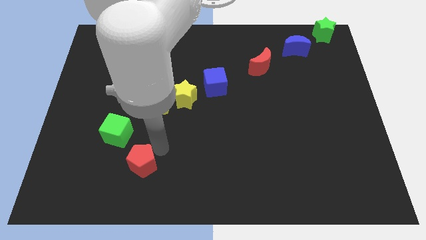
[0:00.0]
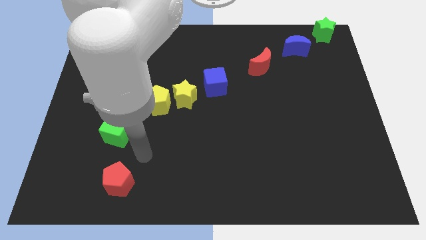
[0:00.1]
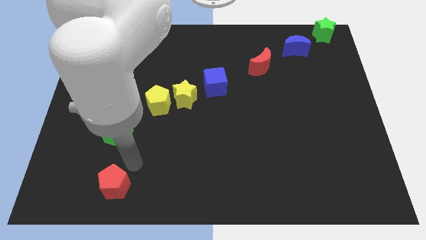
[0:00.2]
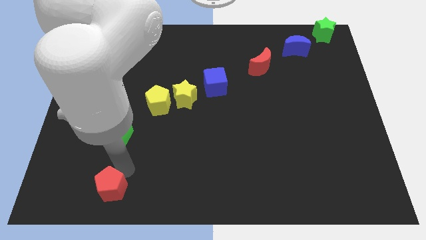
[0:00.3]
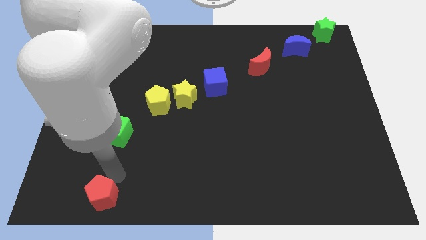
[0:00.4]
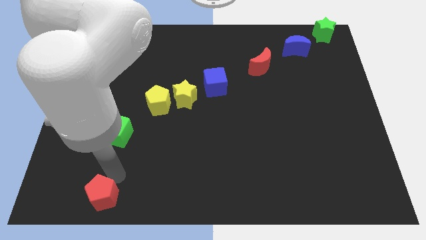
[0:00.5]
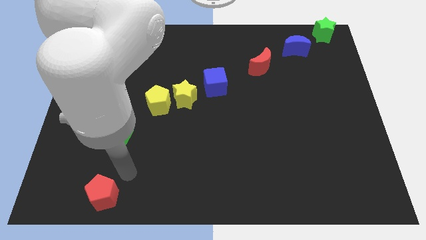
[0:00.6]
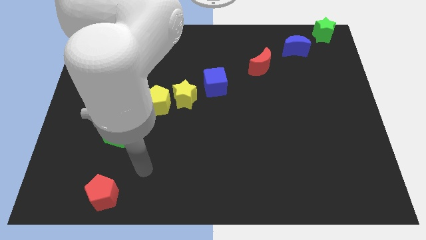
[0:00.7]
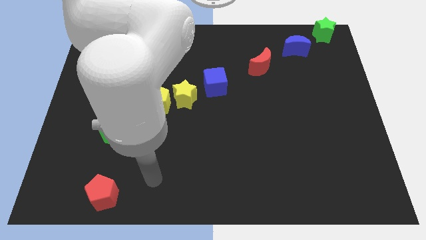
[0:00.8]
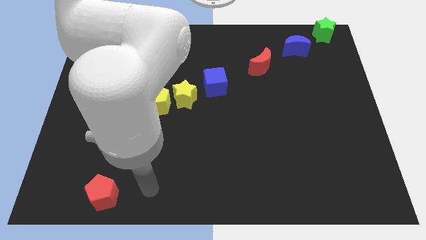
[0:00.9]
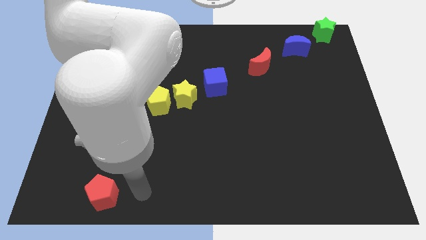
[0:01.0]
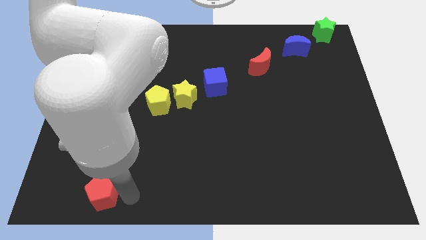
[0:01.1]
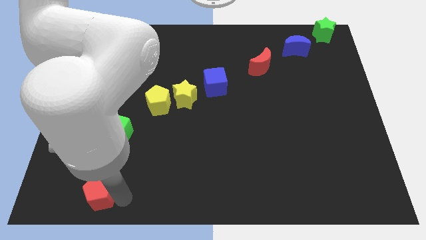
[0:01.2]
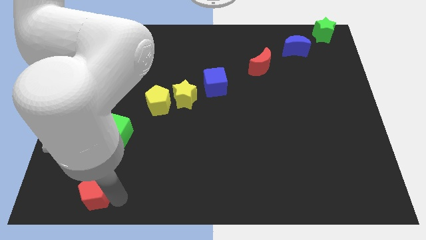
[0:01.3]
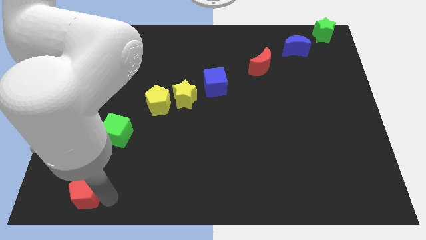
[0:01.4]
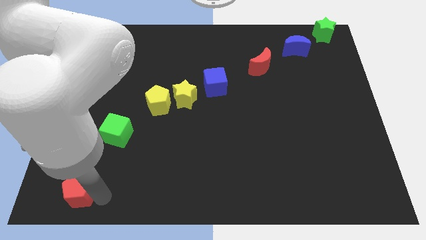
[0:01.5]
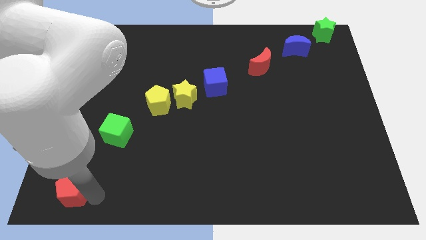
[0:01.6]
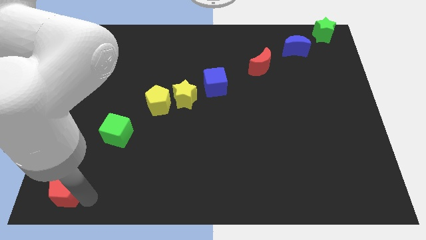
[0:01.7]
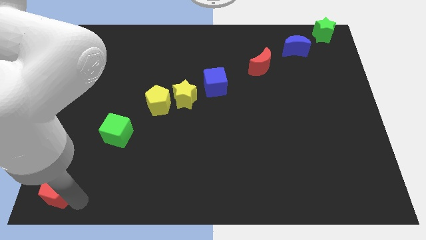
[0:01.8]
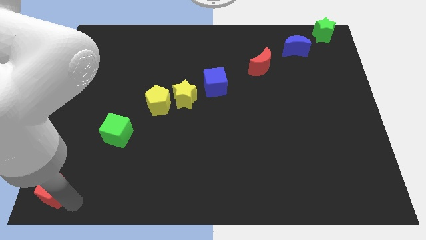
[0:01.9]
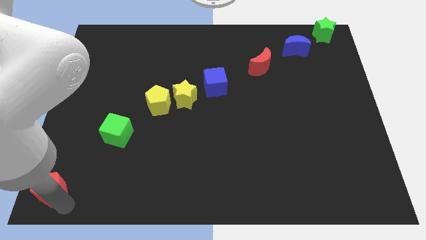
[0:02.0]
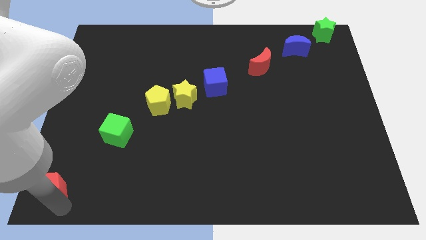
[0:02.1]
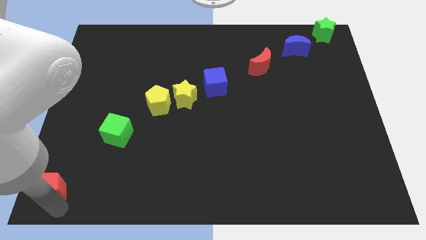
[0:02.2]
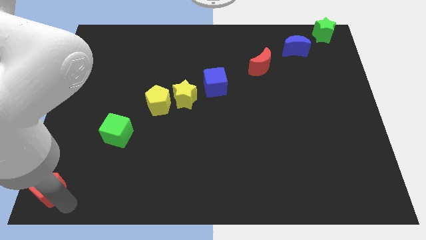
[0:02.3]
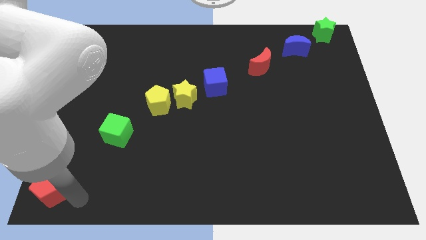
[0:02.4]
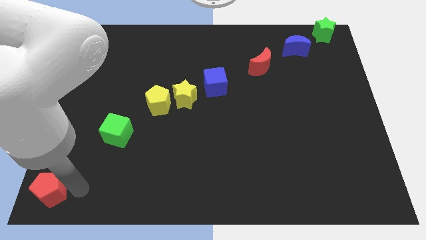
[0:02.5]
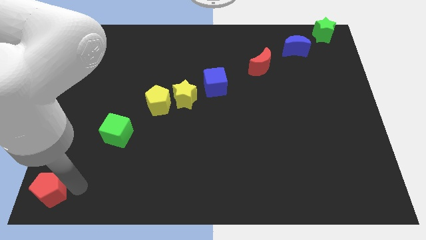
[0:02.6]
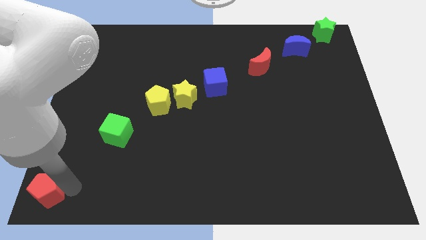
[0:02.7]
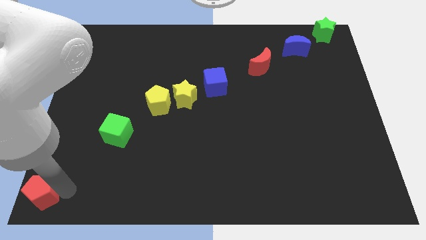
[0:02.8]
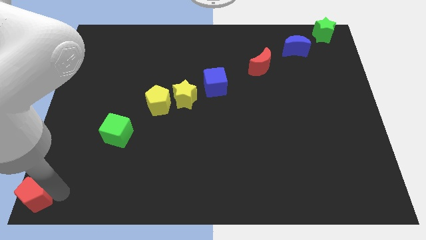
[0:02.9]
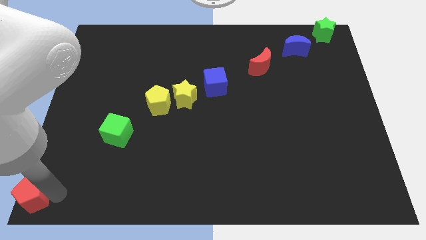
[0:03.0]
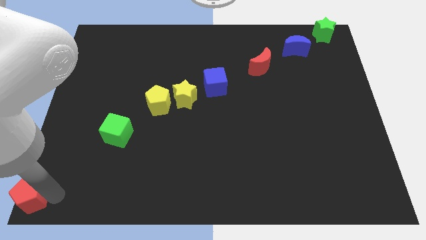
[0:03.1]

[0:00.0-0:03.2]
place the red pentagon to the bottom left corner of the board

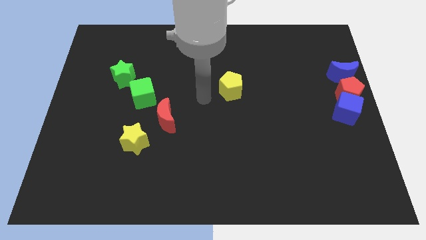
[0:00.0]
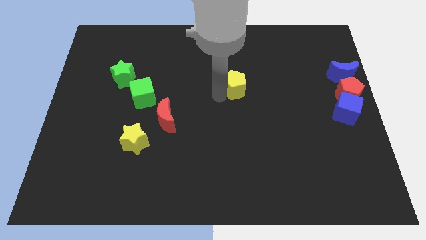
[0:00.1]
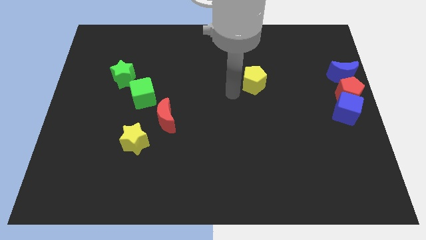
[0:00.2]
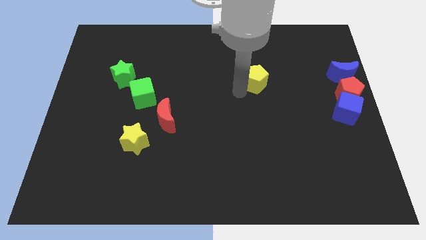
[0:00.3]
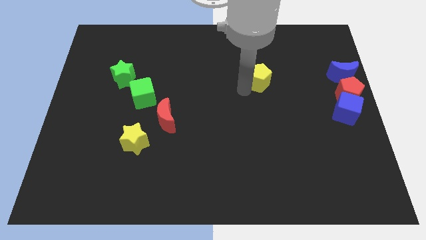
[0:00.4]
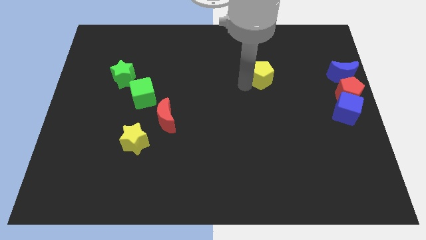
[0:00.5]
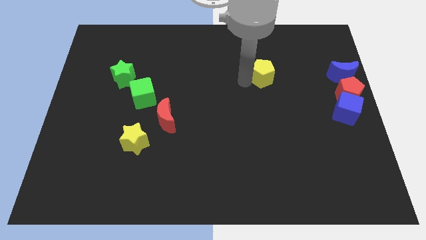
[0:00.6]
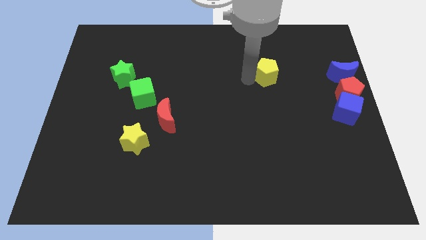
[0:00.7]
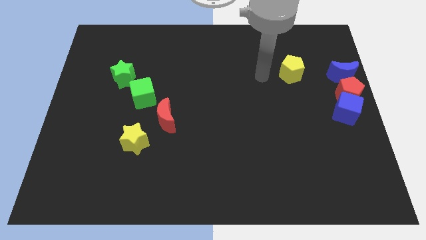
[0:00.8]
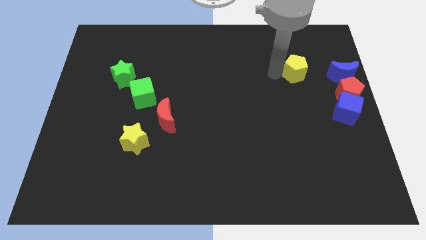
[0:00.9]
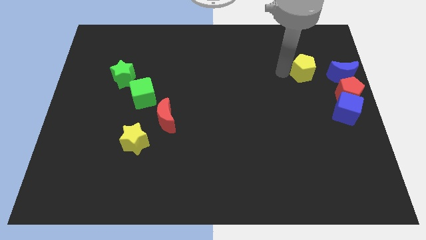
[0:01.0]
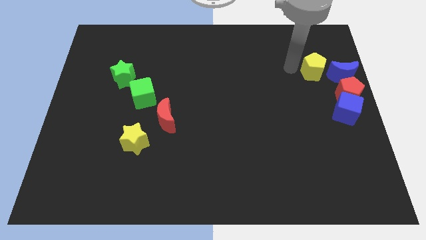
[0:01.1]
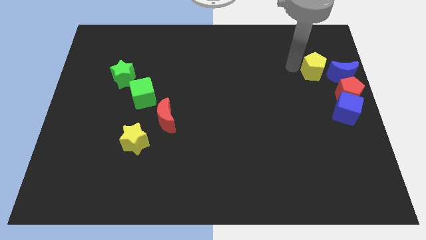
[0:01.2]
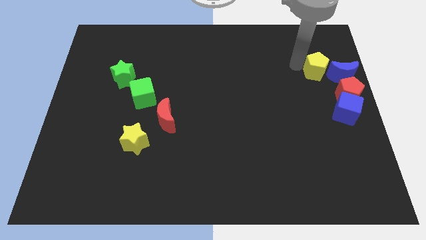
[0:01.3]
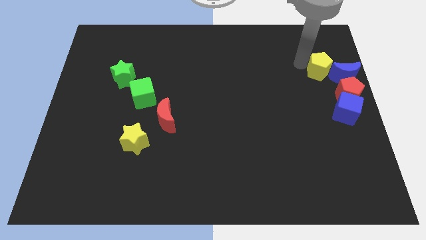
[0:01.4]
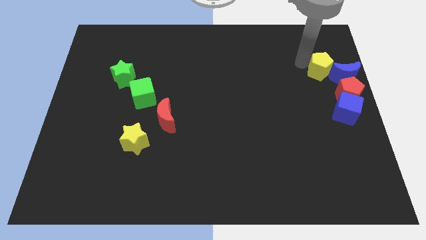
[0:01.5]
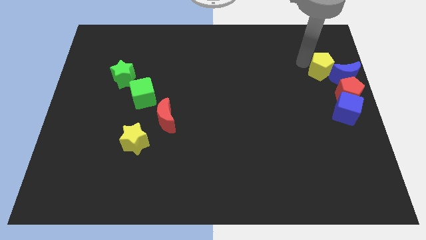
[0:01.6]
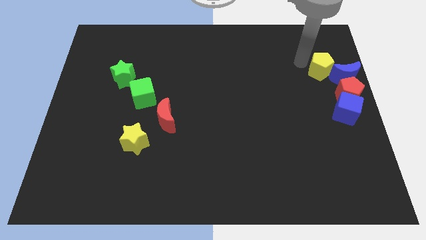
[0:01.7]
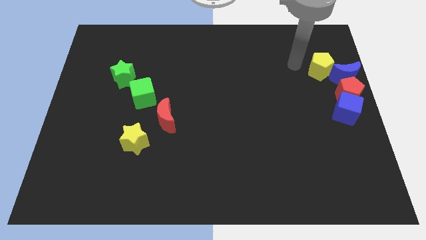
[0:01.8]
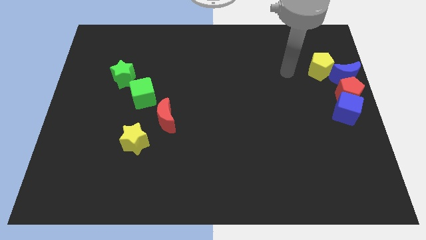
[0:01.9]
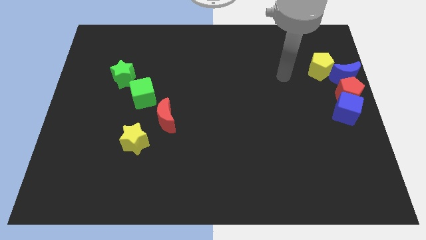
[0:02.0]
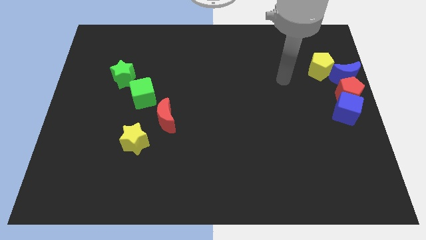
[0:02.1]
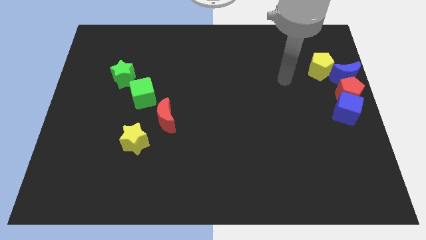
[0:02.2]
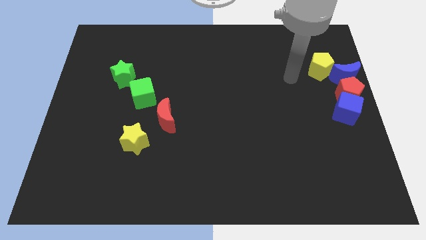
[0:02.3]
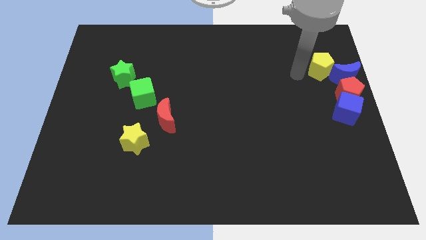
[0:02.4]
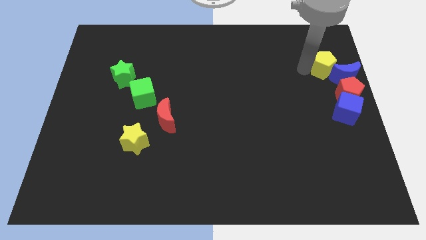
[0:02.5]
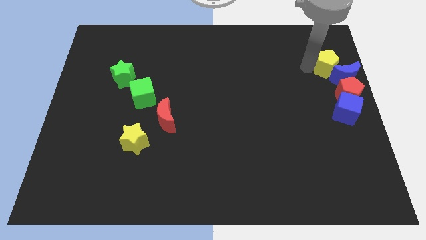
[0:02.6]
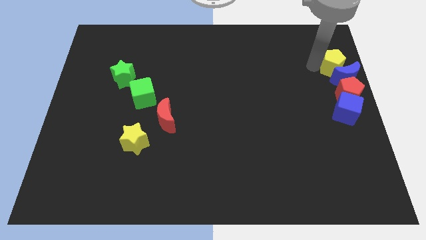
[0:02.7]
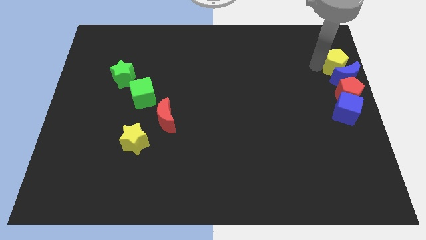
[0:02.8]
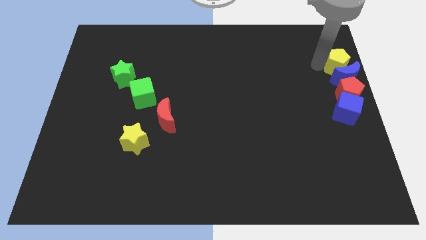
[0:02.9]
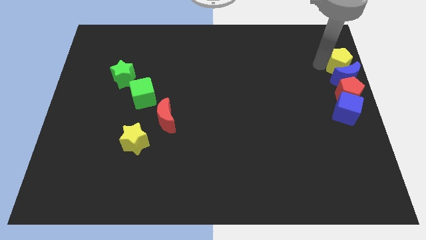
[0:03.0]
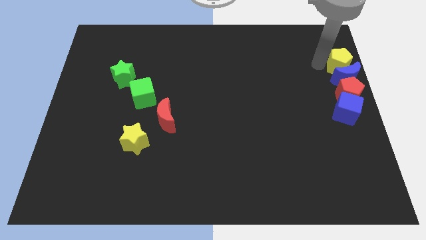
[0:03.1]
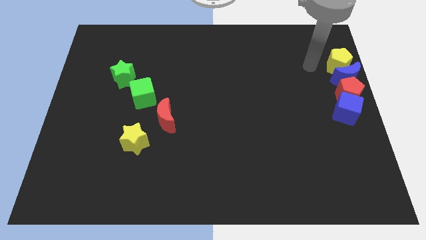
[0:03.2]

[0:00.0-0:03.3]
move the yellow pentagon into the blue moon

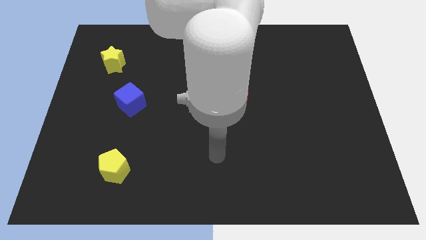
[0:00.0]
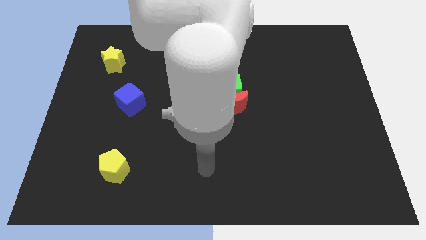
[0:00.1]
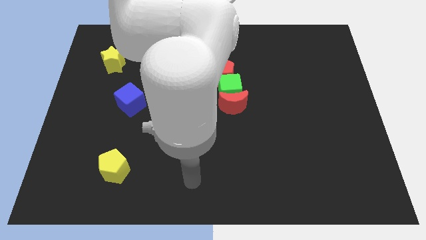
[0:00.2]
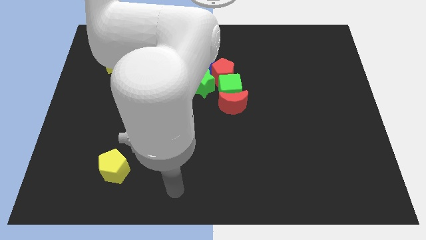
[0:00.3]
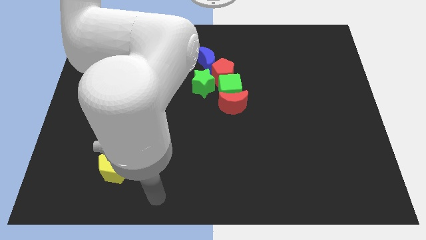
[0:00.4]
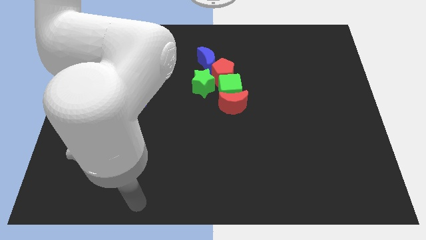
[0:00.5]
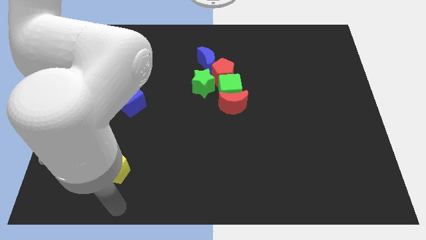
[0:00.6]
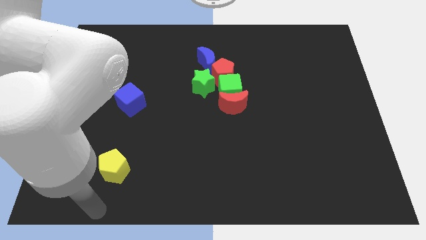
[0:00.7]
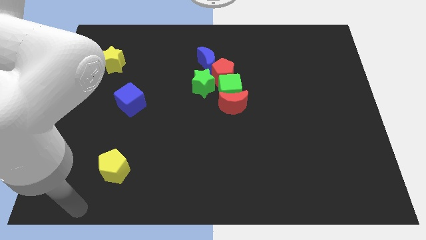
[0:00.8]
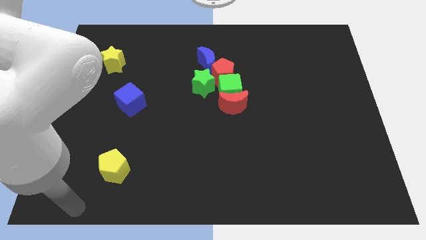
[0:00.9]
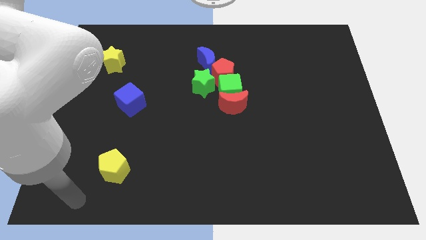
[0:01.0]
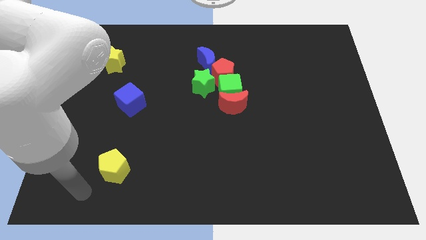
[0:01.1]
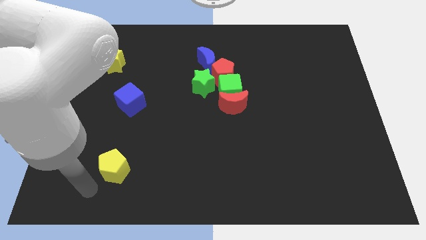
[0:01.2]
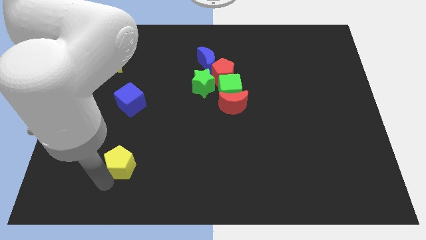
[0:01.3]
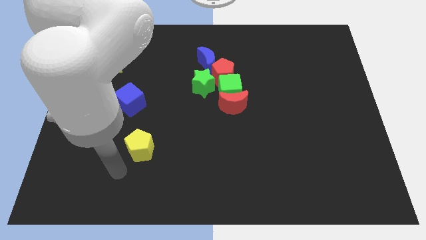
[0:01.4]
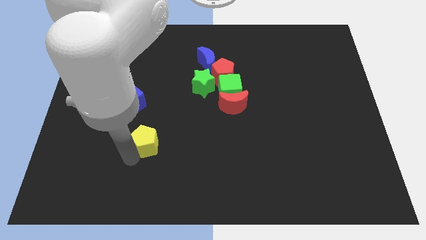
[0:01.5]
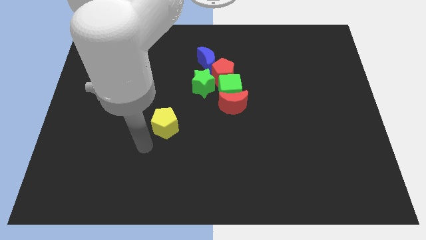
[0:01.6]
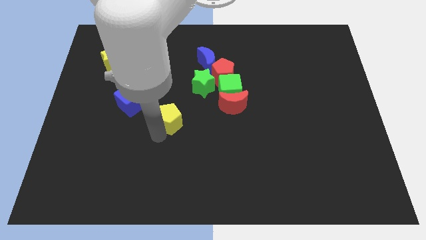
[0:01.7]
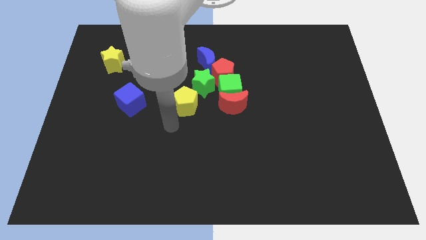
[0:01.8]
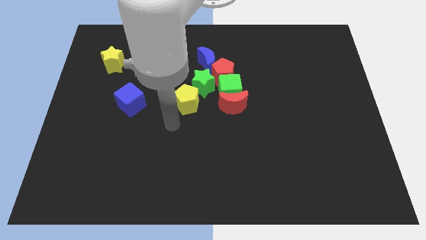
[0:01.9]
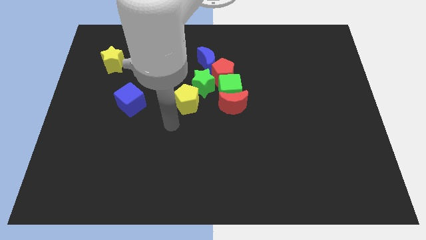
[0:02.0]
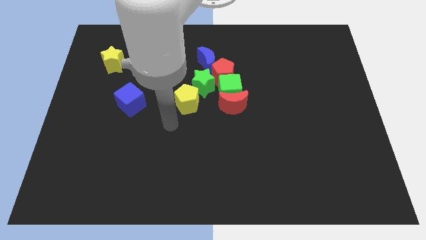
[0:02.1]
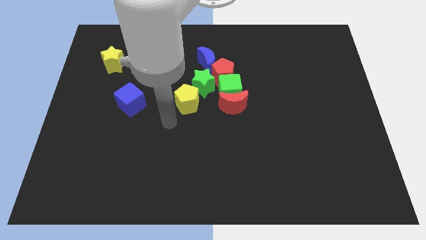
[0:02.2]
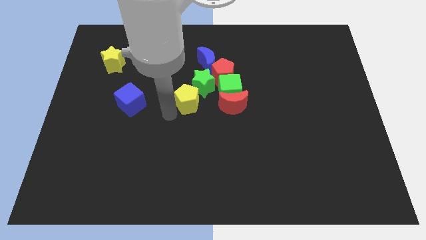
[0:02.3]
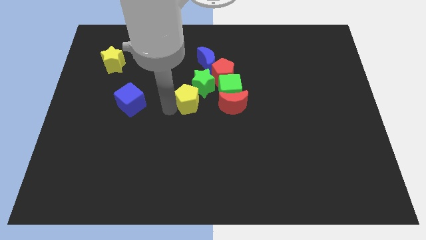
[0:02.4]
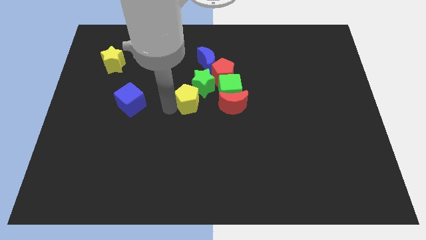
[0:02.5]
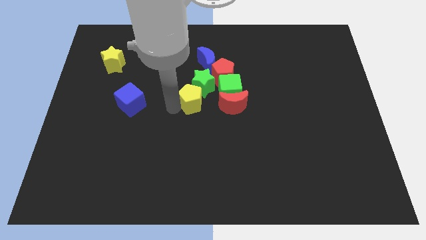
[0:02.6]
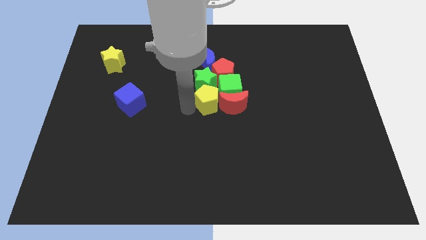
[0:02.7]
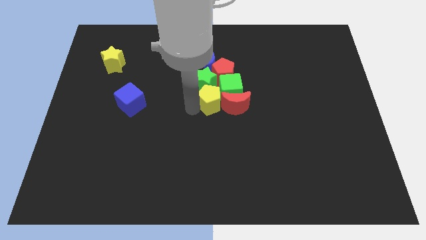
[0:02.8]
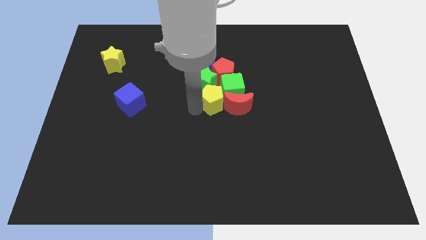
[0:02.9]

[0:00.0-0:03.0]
move the yellow pentagon left of the red moon
